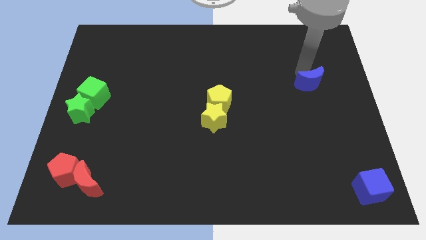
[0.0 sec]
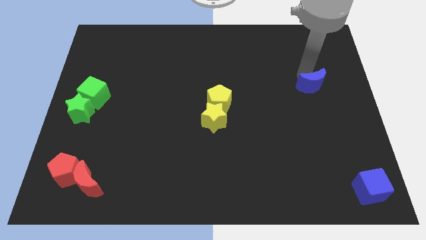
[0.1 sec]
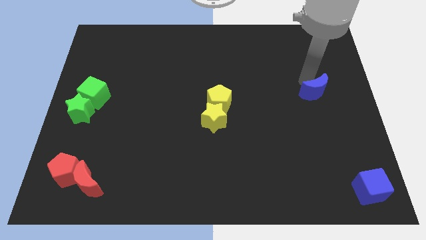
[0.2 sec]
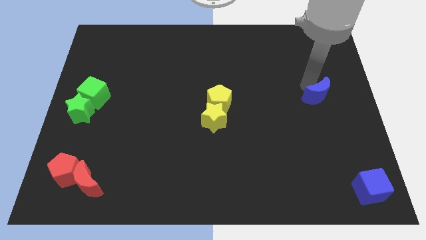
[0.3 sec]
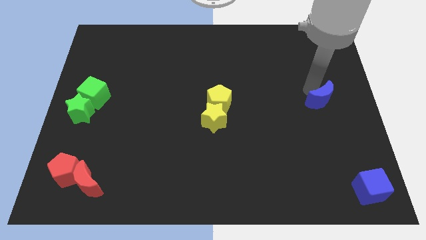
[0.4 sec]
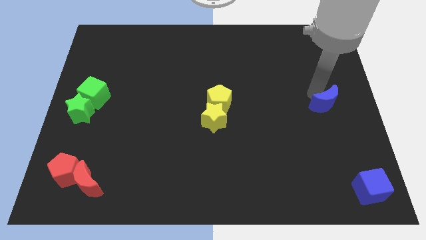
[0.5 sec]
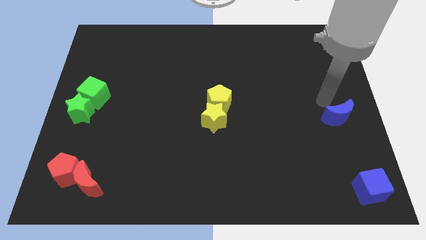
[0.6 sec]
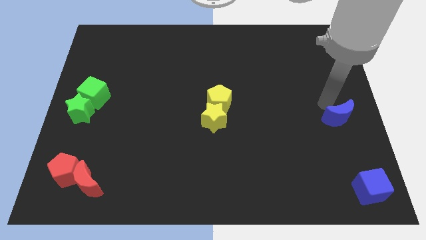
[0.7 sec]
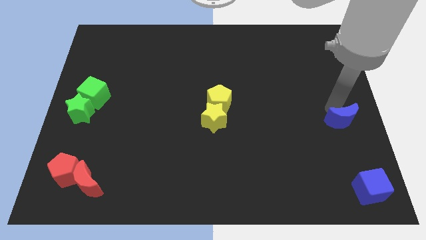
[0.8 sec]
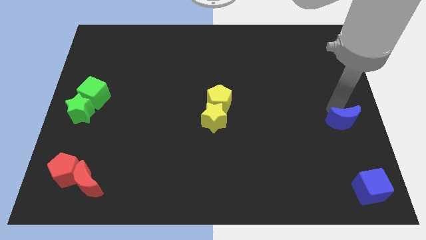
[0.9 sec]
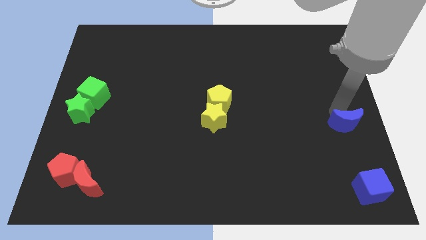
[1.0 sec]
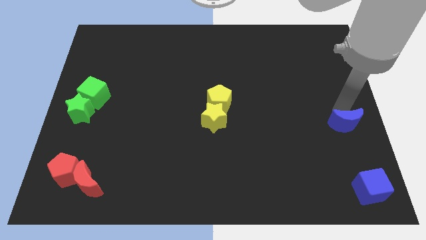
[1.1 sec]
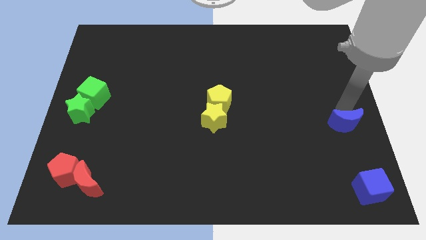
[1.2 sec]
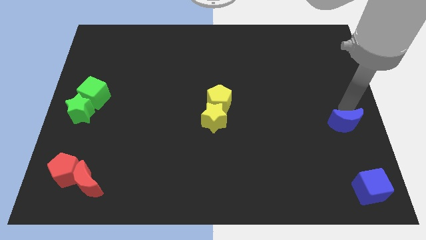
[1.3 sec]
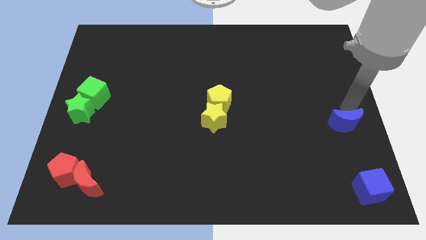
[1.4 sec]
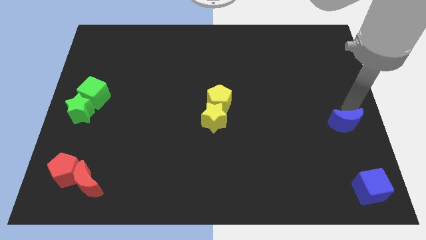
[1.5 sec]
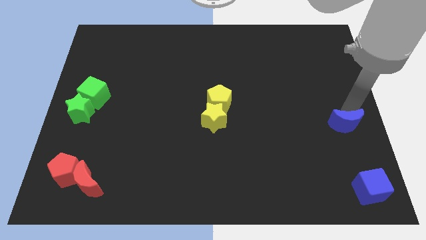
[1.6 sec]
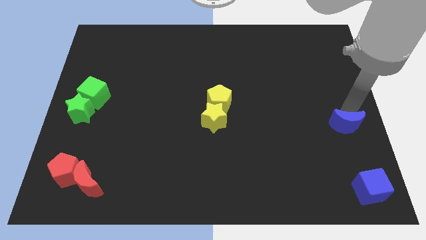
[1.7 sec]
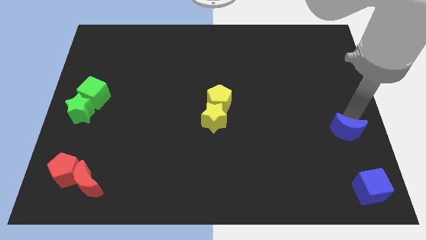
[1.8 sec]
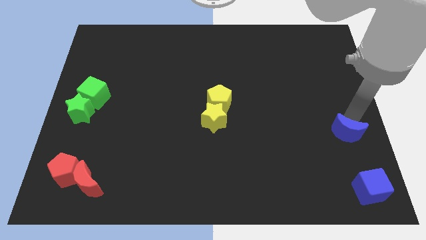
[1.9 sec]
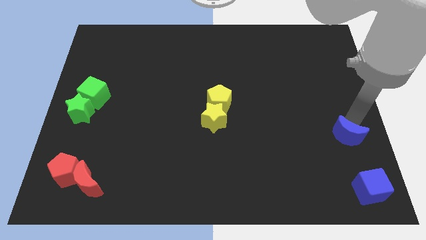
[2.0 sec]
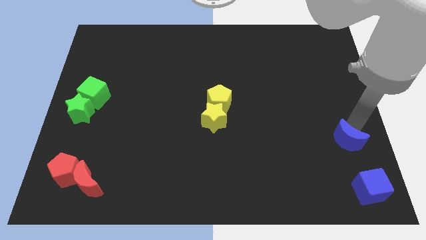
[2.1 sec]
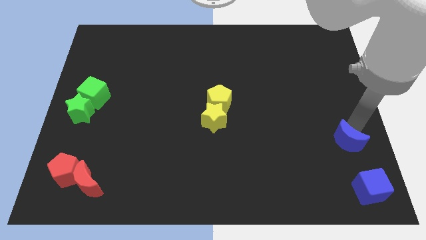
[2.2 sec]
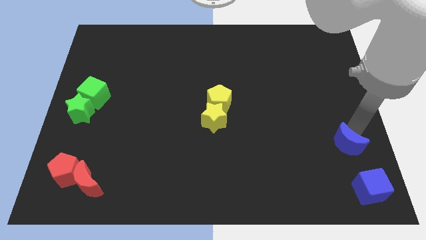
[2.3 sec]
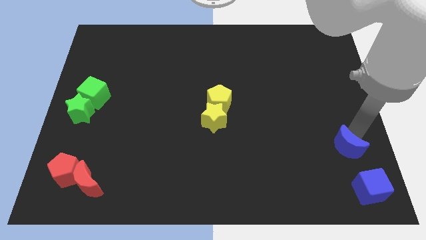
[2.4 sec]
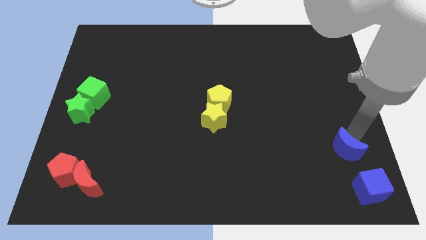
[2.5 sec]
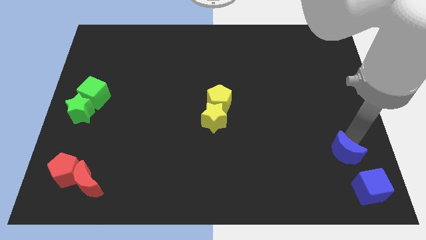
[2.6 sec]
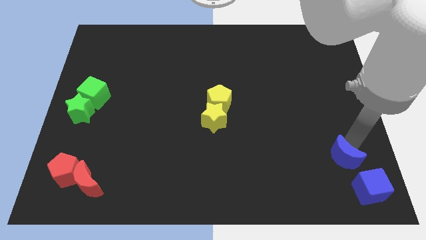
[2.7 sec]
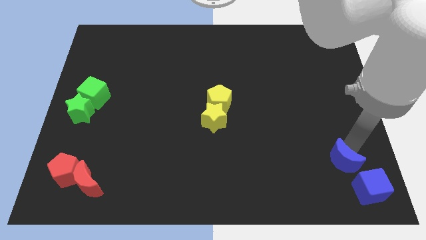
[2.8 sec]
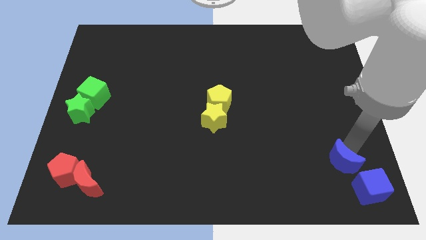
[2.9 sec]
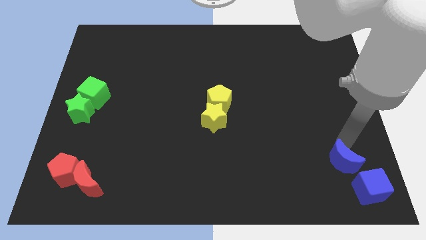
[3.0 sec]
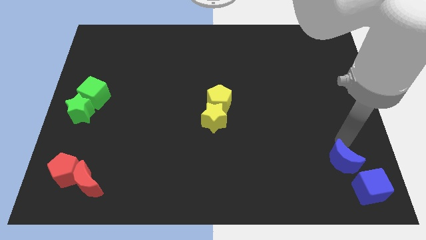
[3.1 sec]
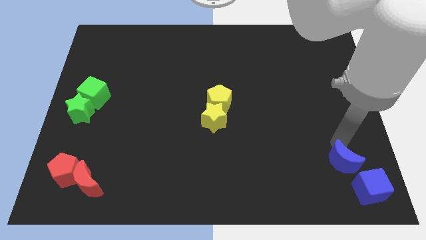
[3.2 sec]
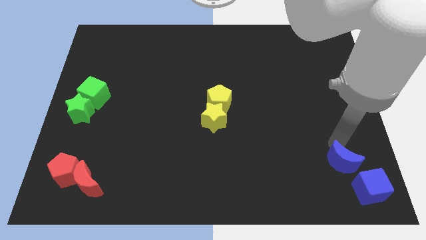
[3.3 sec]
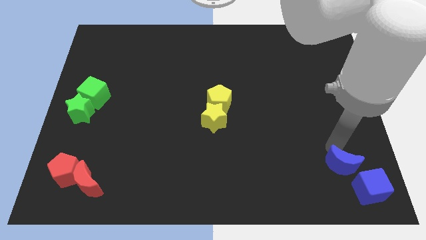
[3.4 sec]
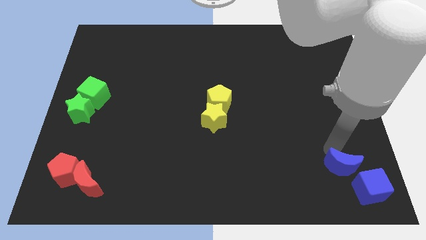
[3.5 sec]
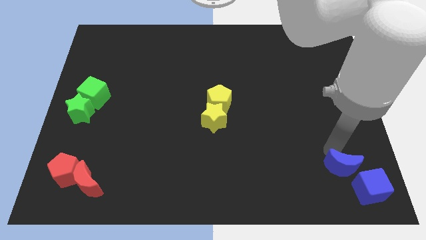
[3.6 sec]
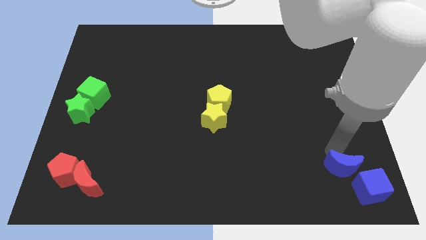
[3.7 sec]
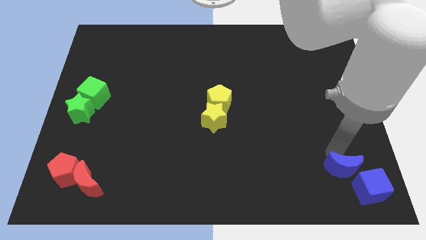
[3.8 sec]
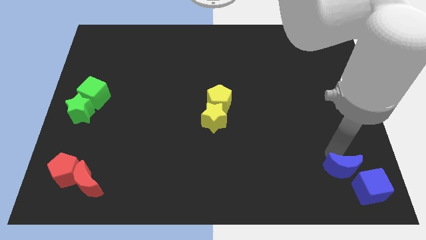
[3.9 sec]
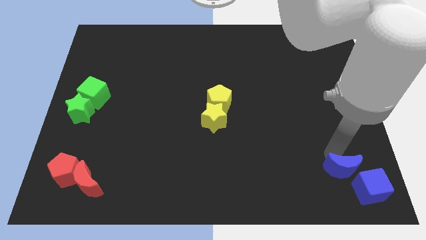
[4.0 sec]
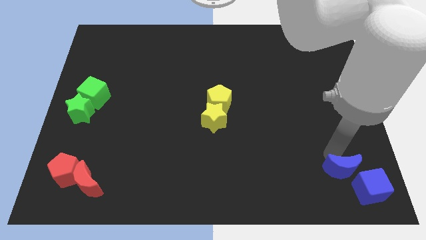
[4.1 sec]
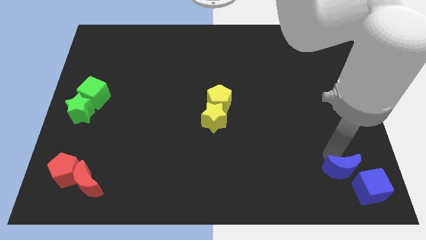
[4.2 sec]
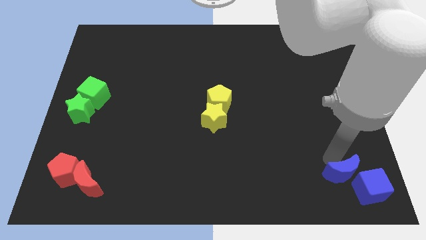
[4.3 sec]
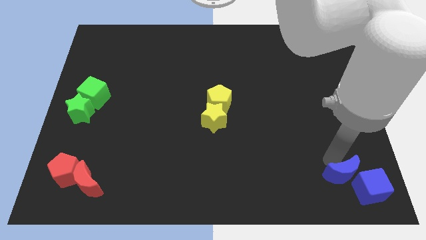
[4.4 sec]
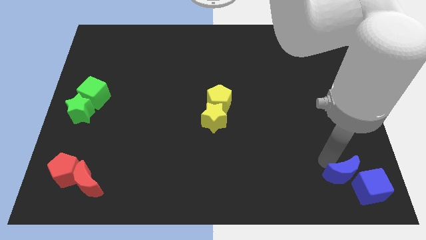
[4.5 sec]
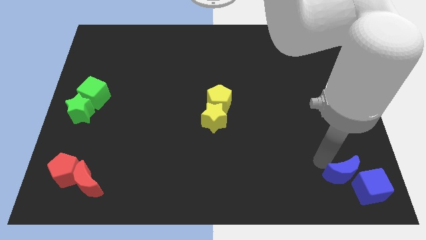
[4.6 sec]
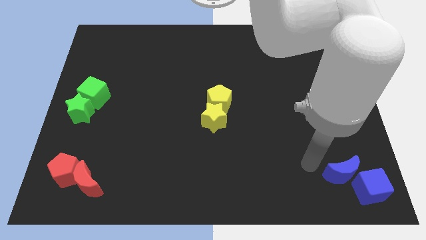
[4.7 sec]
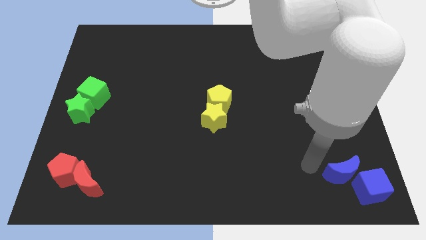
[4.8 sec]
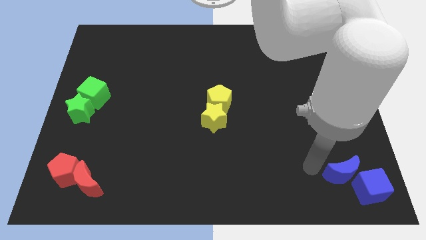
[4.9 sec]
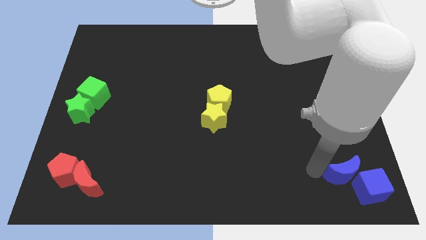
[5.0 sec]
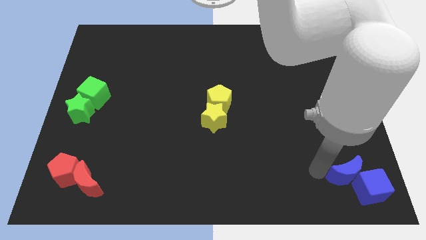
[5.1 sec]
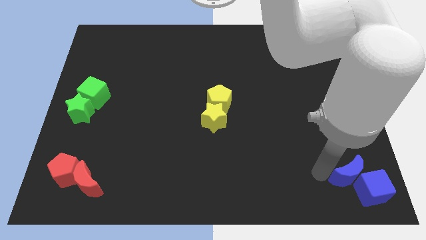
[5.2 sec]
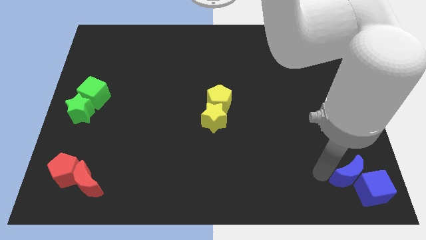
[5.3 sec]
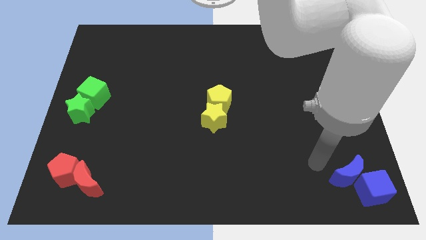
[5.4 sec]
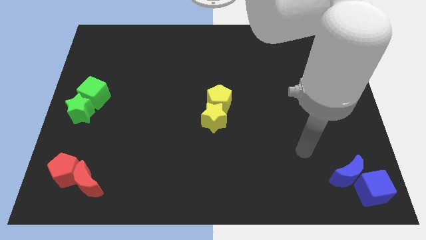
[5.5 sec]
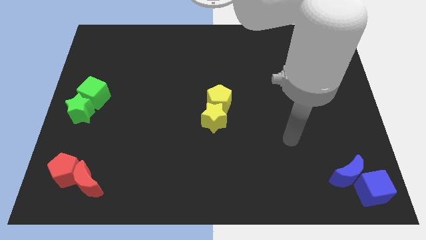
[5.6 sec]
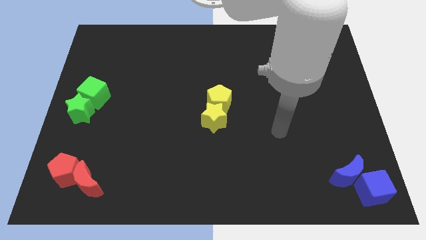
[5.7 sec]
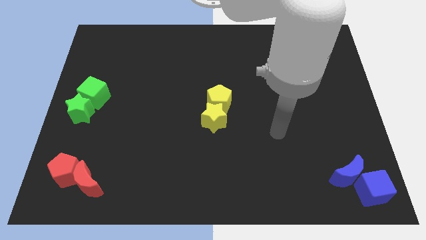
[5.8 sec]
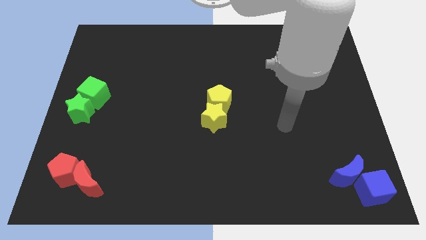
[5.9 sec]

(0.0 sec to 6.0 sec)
push the blue moon into the blue cube

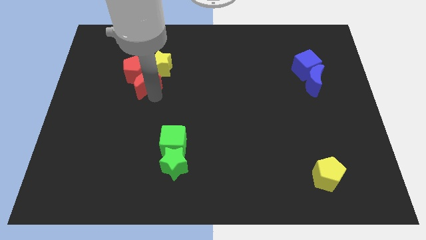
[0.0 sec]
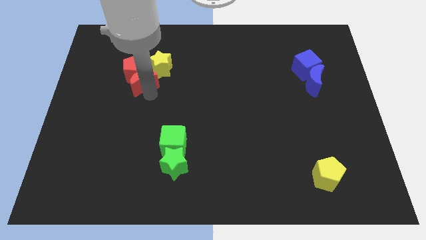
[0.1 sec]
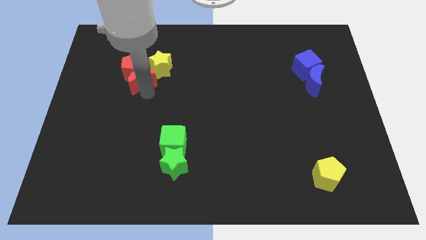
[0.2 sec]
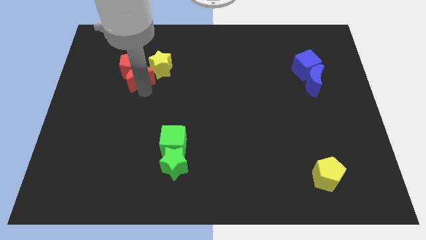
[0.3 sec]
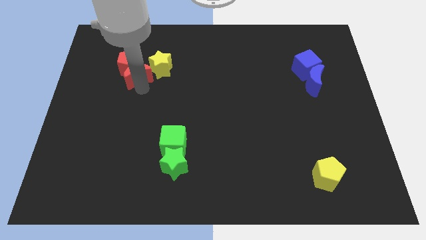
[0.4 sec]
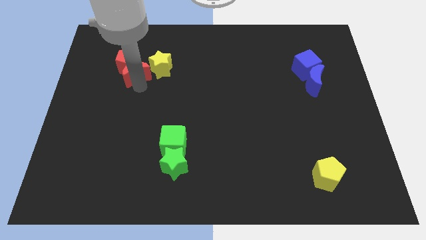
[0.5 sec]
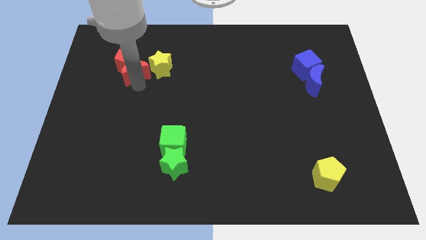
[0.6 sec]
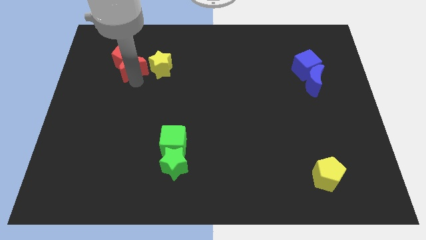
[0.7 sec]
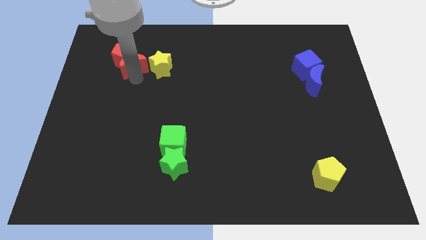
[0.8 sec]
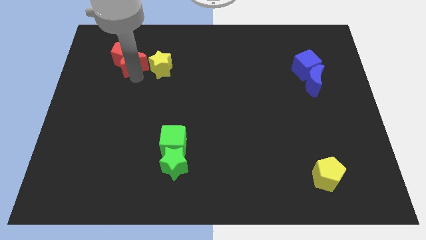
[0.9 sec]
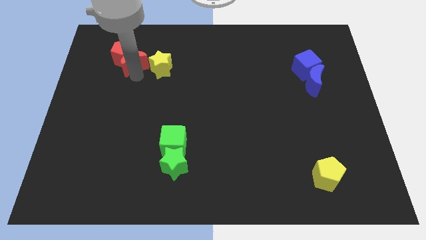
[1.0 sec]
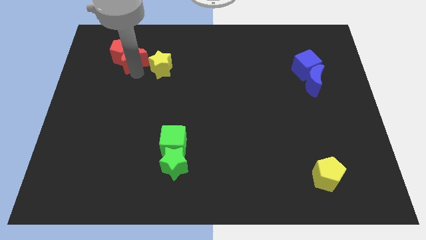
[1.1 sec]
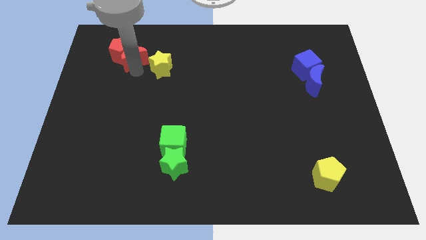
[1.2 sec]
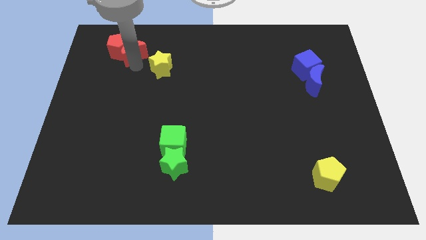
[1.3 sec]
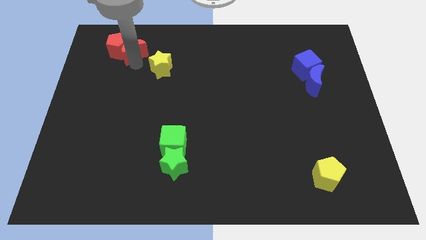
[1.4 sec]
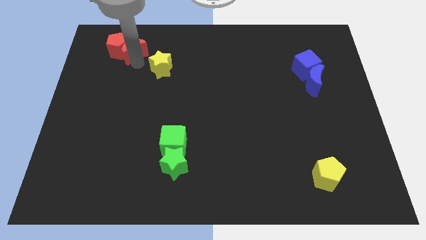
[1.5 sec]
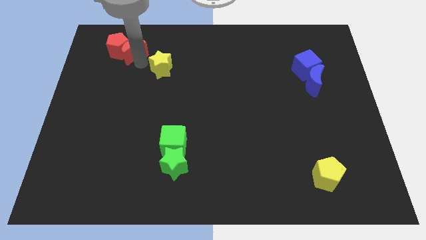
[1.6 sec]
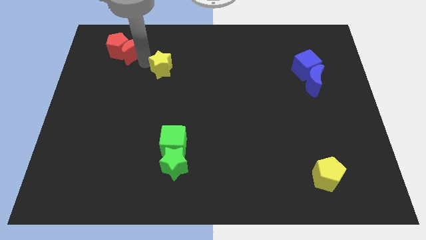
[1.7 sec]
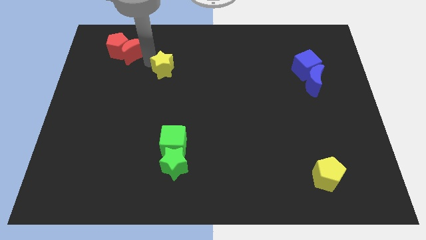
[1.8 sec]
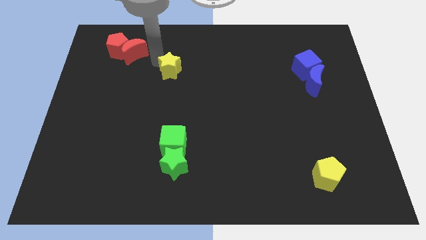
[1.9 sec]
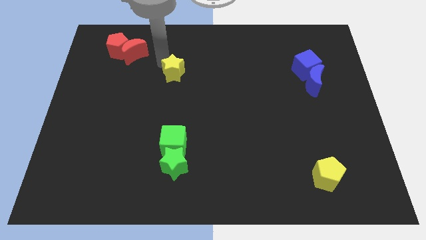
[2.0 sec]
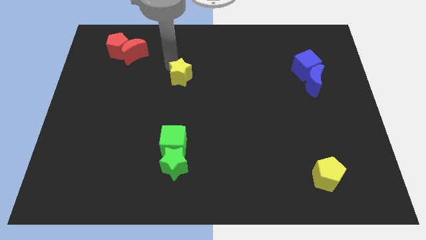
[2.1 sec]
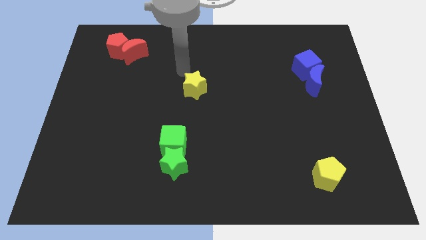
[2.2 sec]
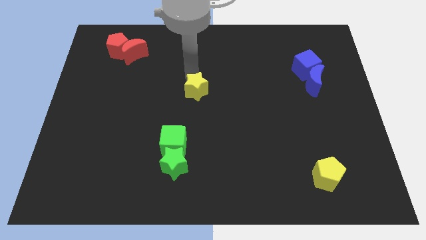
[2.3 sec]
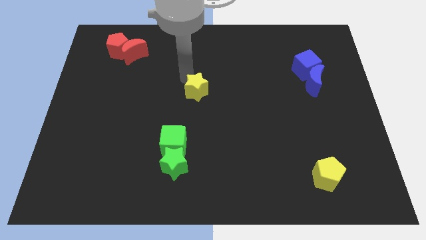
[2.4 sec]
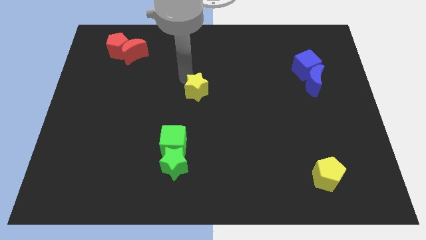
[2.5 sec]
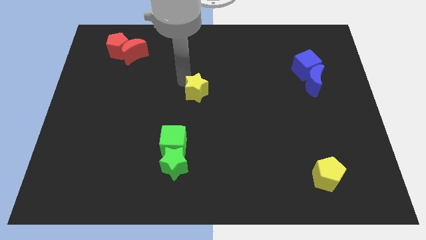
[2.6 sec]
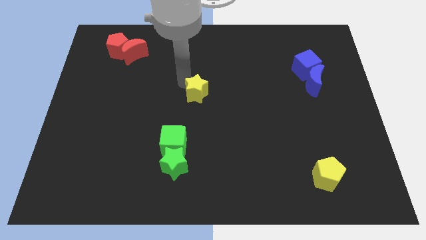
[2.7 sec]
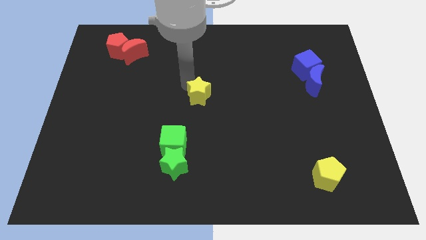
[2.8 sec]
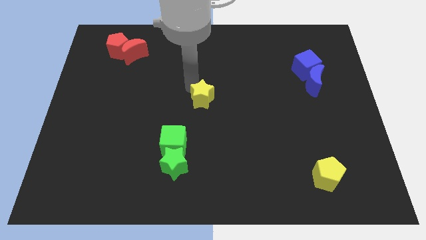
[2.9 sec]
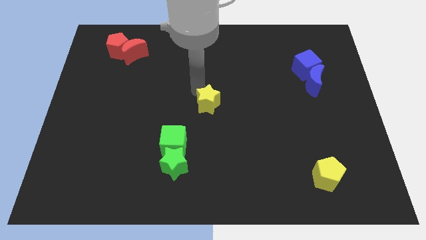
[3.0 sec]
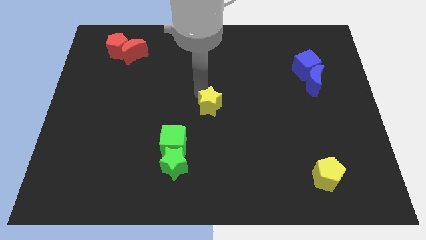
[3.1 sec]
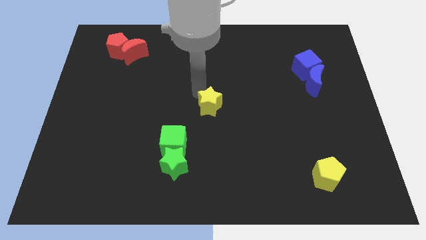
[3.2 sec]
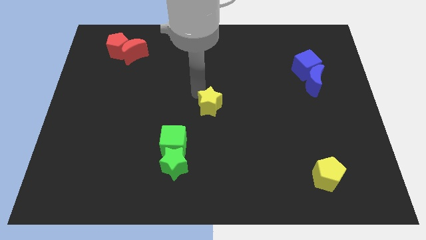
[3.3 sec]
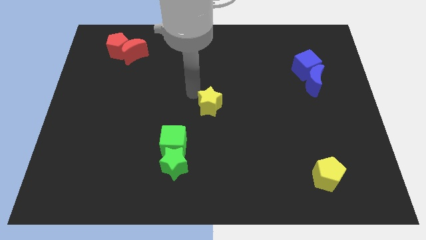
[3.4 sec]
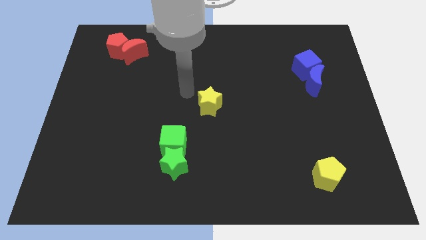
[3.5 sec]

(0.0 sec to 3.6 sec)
push the yellow star towards the center of the board
